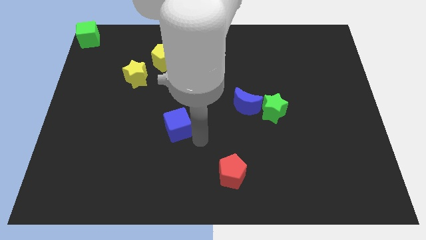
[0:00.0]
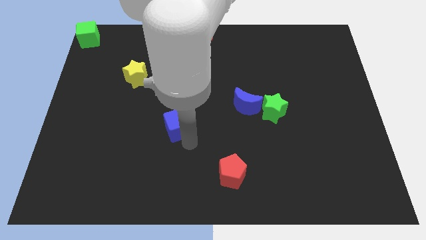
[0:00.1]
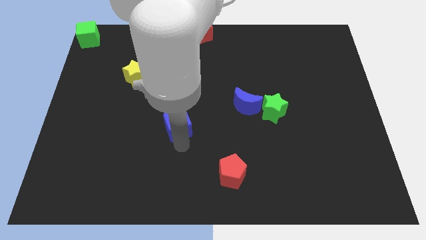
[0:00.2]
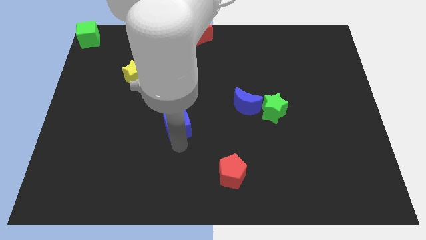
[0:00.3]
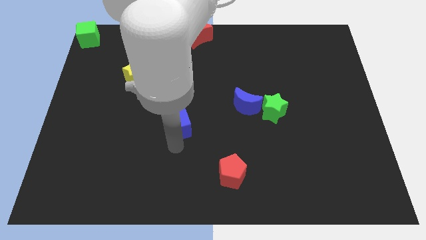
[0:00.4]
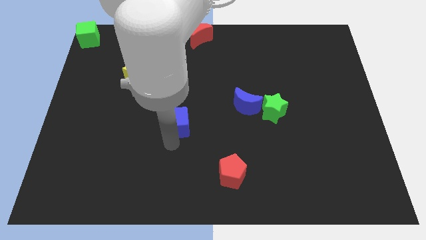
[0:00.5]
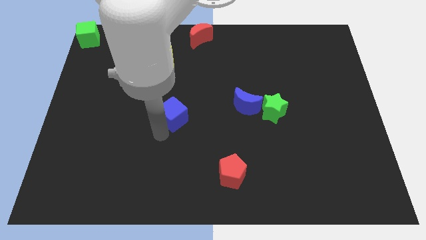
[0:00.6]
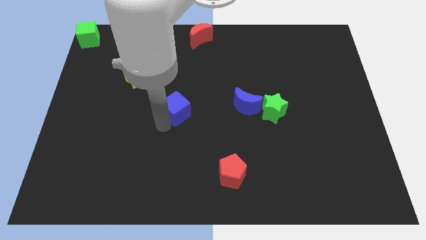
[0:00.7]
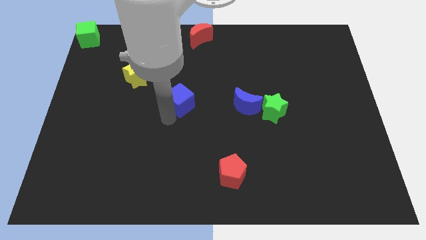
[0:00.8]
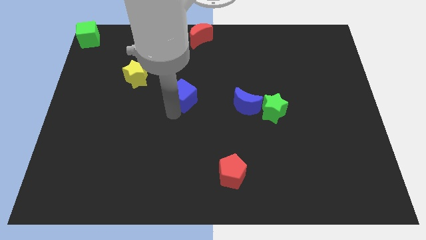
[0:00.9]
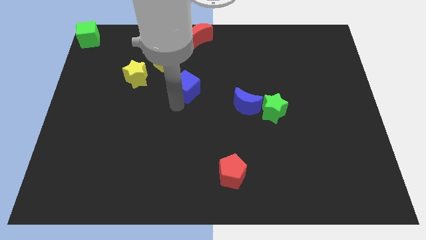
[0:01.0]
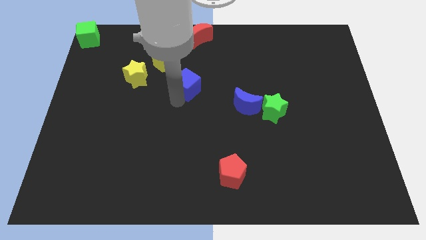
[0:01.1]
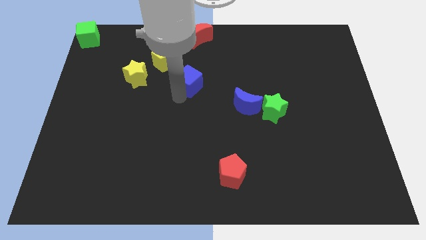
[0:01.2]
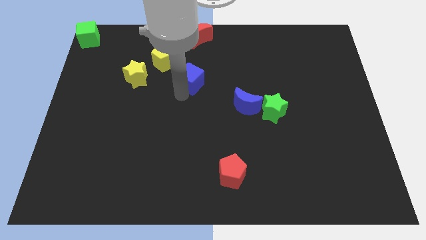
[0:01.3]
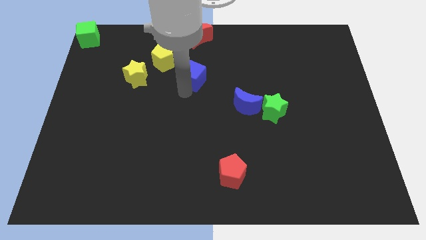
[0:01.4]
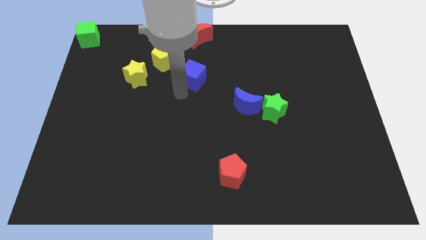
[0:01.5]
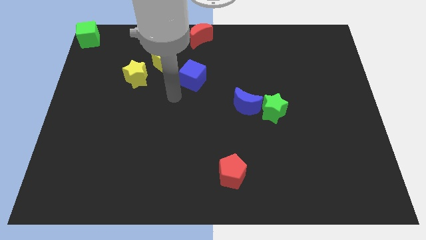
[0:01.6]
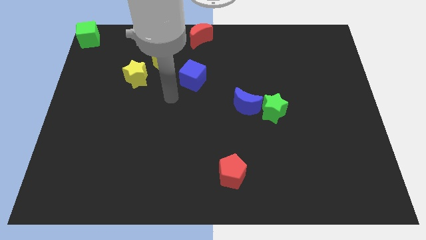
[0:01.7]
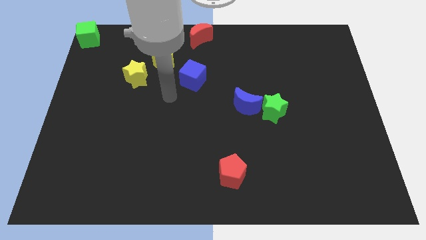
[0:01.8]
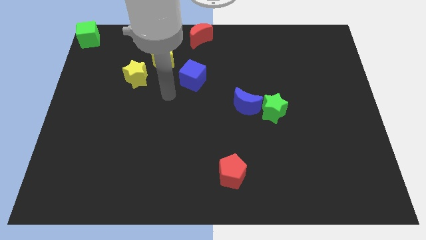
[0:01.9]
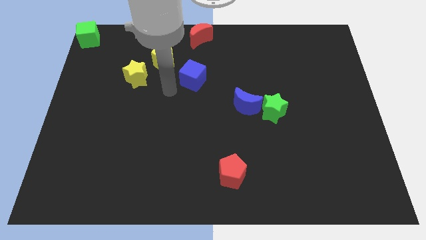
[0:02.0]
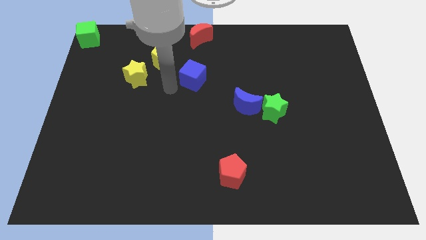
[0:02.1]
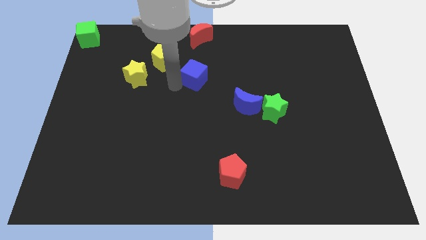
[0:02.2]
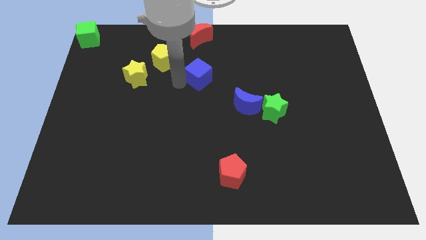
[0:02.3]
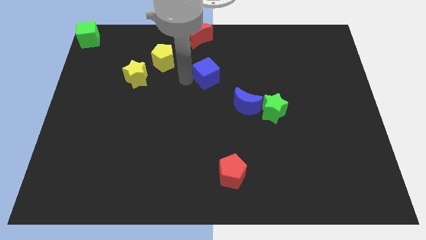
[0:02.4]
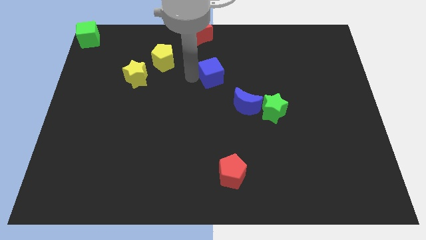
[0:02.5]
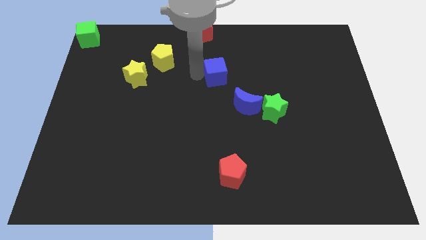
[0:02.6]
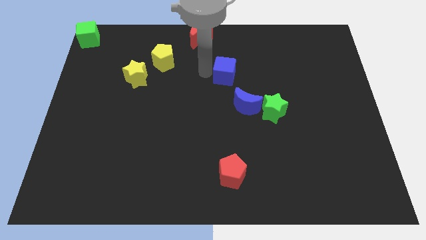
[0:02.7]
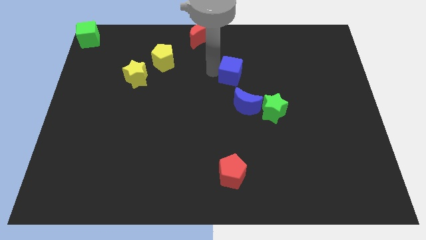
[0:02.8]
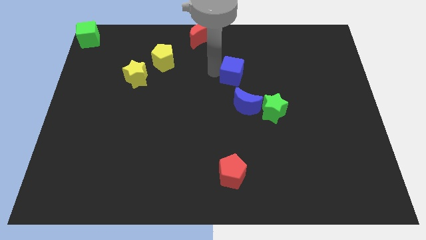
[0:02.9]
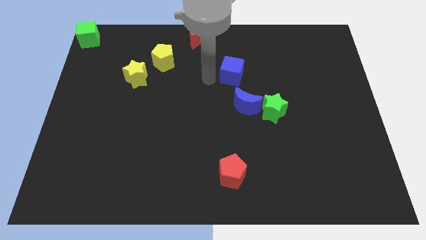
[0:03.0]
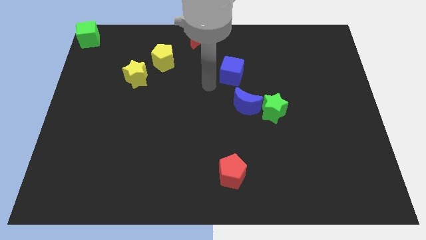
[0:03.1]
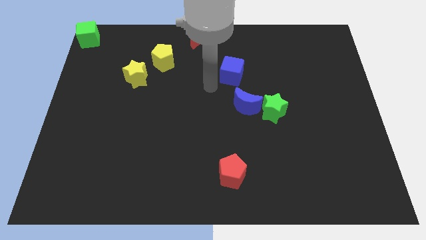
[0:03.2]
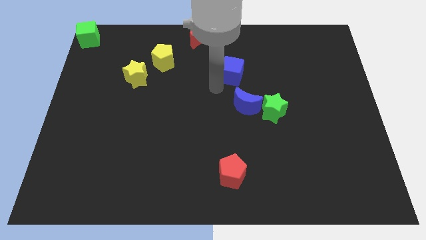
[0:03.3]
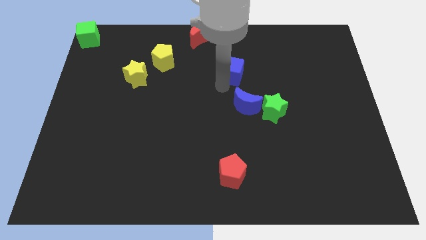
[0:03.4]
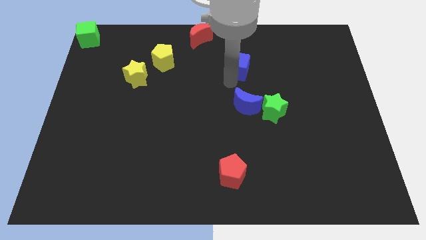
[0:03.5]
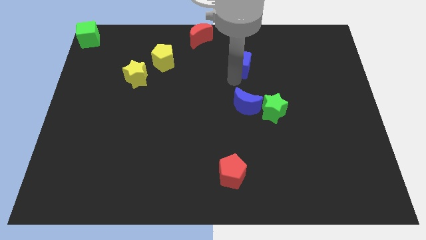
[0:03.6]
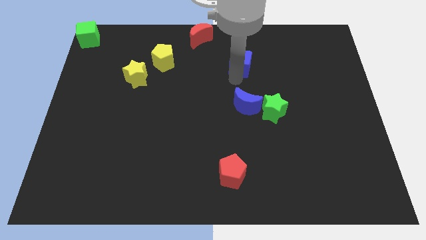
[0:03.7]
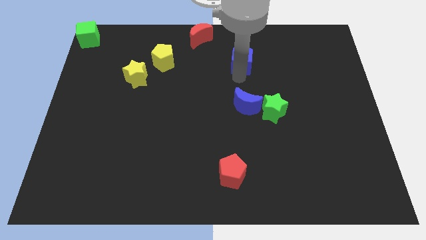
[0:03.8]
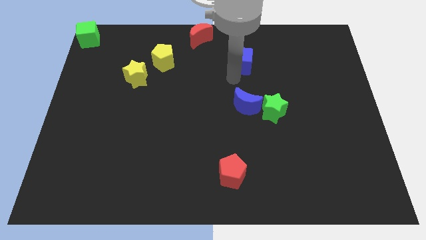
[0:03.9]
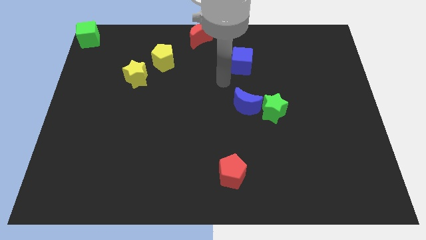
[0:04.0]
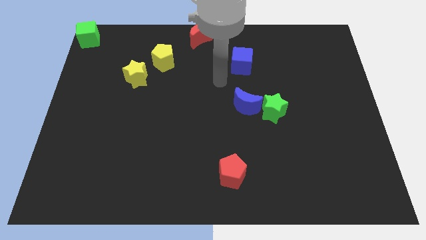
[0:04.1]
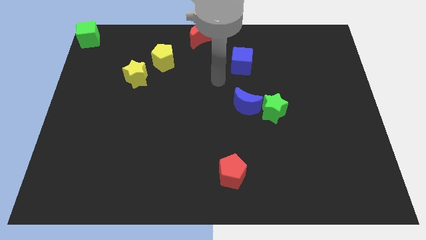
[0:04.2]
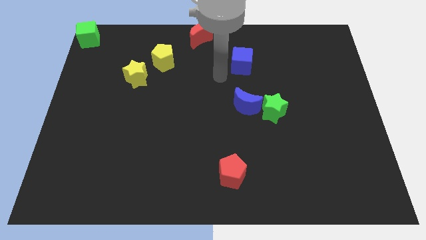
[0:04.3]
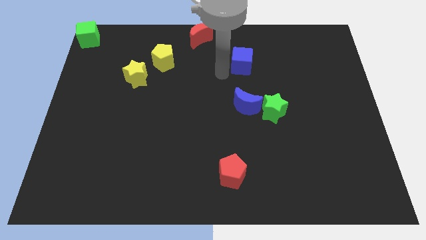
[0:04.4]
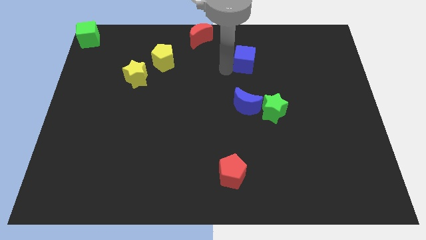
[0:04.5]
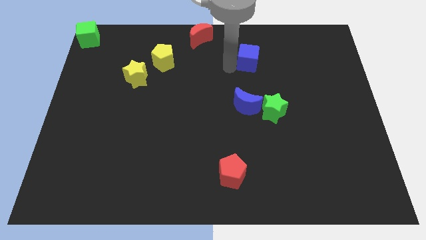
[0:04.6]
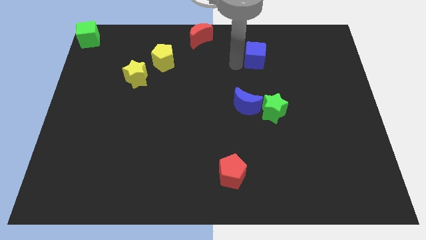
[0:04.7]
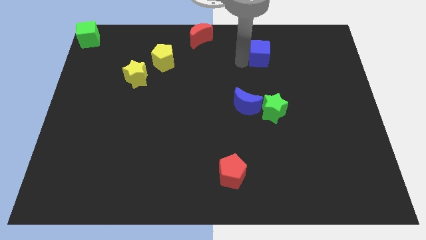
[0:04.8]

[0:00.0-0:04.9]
move the blue cube above the blue moon

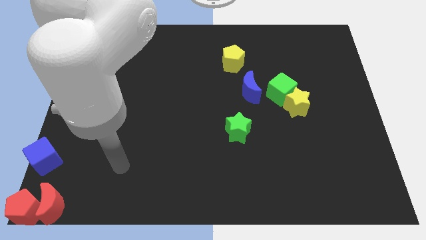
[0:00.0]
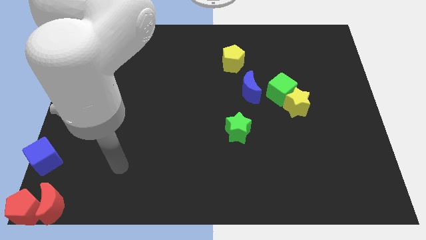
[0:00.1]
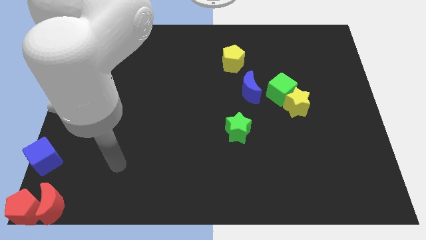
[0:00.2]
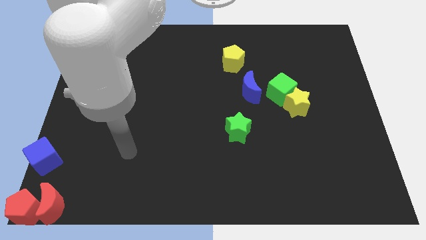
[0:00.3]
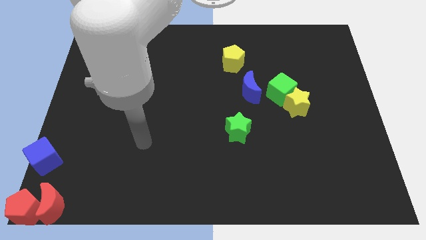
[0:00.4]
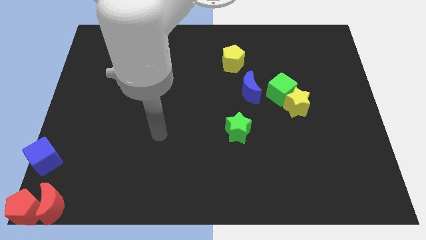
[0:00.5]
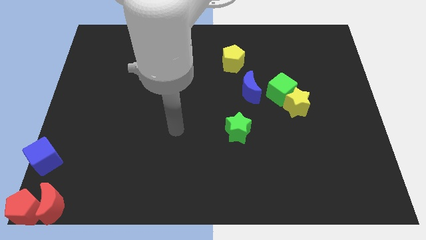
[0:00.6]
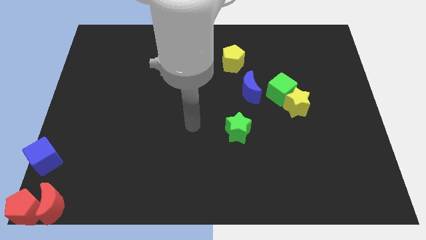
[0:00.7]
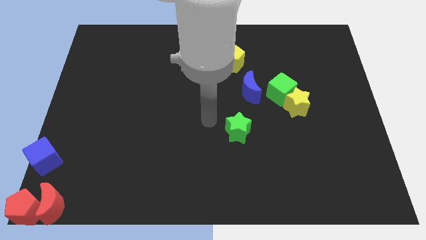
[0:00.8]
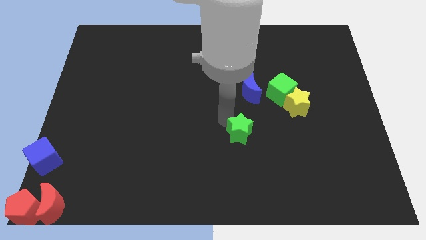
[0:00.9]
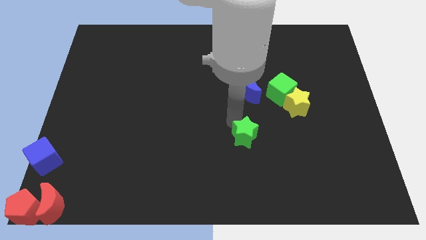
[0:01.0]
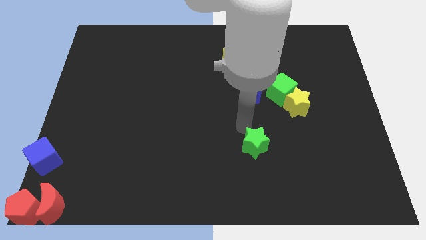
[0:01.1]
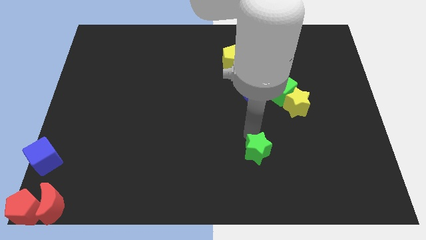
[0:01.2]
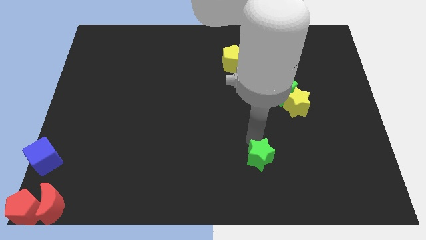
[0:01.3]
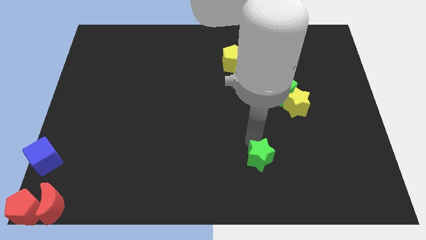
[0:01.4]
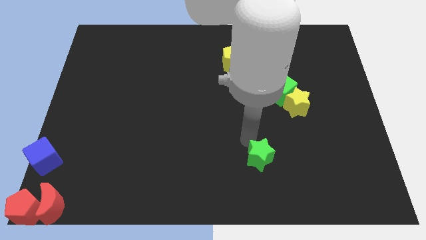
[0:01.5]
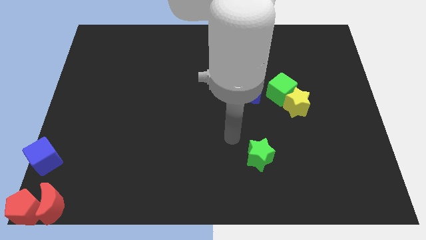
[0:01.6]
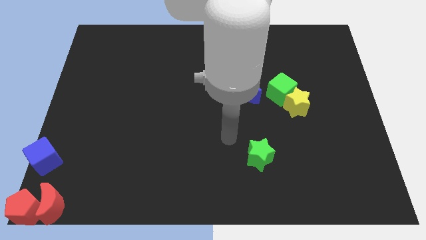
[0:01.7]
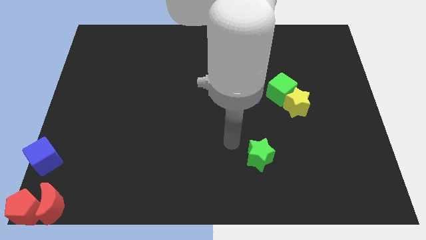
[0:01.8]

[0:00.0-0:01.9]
move the green star towards the right side of the board

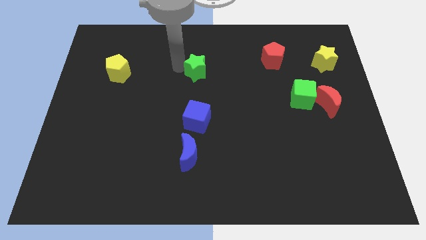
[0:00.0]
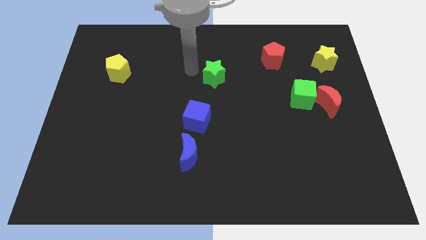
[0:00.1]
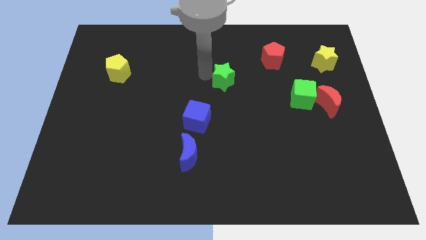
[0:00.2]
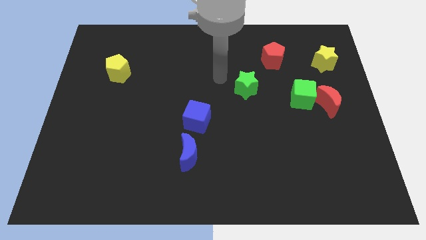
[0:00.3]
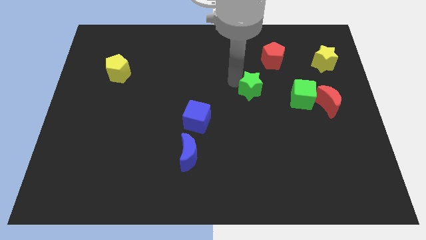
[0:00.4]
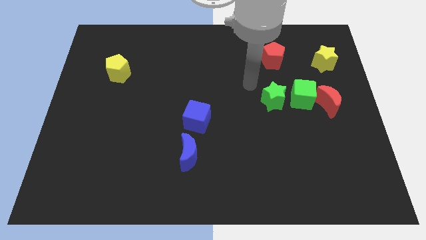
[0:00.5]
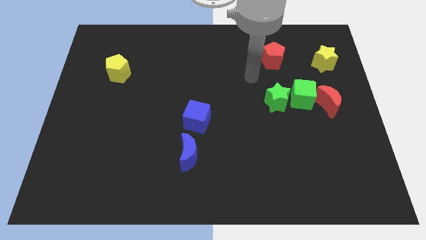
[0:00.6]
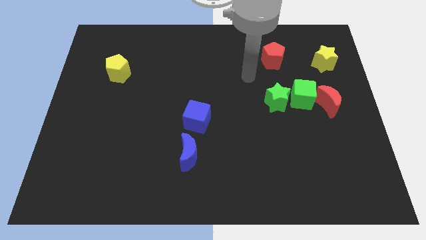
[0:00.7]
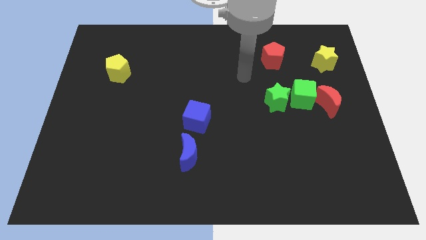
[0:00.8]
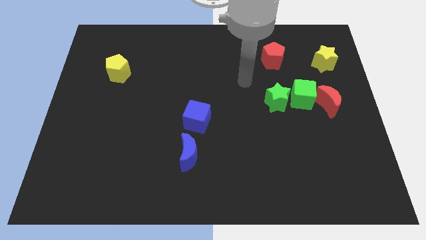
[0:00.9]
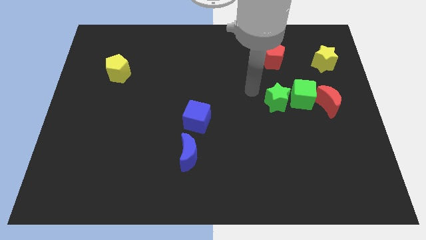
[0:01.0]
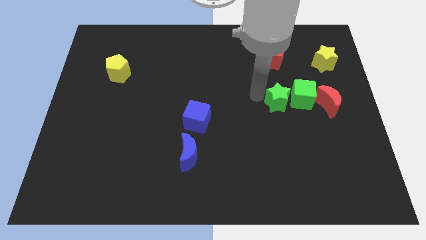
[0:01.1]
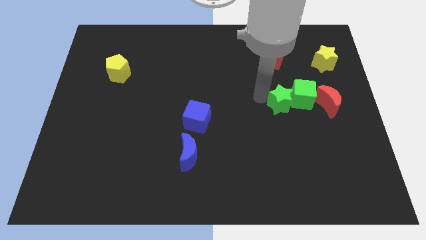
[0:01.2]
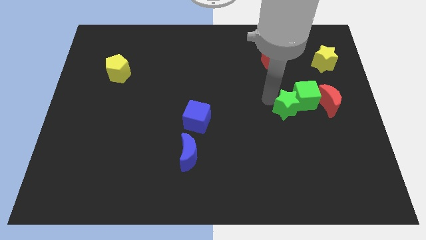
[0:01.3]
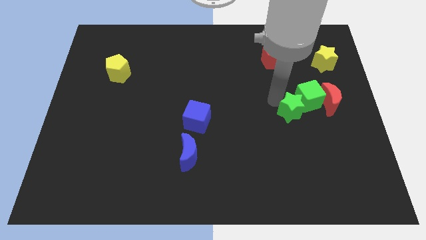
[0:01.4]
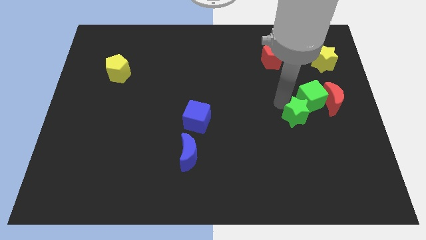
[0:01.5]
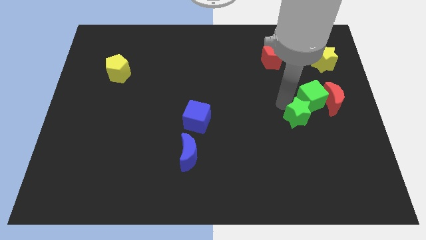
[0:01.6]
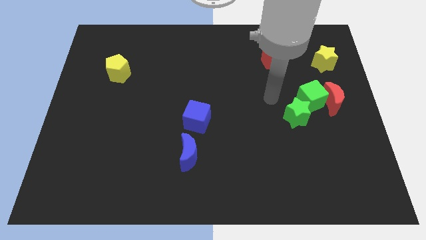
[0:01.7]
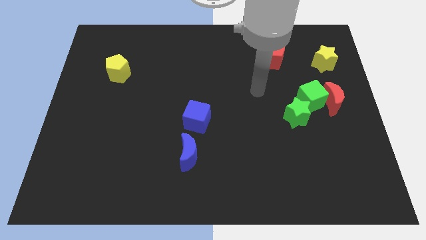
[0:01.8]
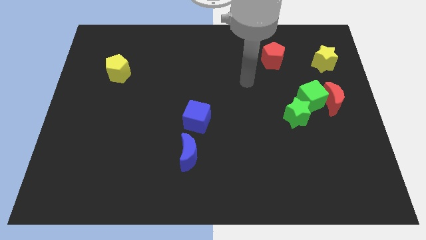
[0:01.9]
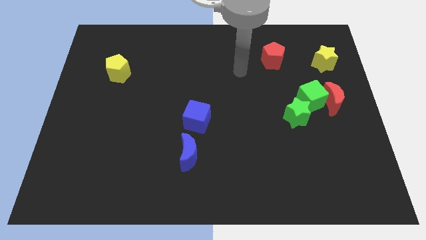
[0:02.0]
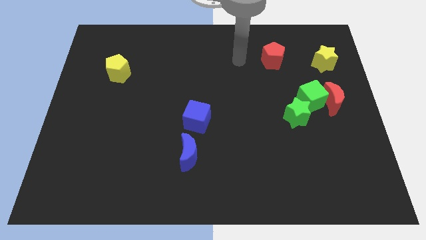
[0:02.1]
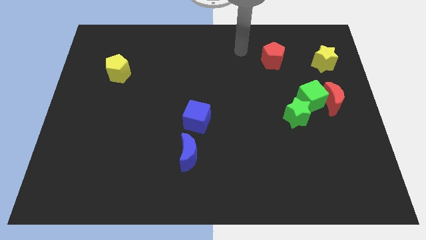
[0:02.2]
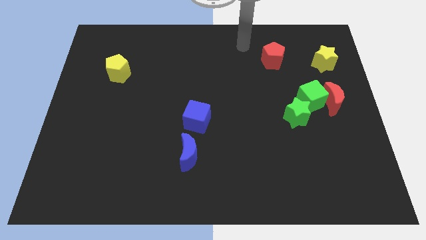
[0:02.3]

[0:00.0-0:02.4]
place green star beside green cube
